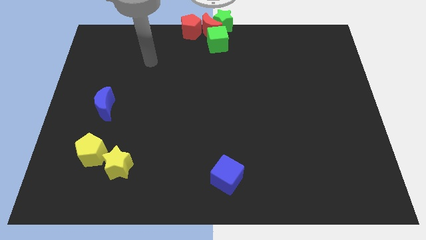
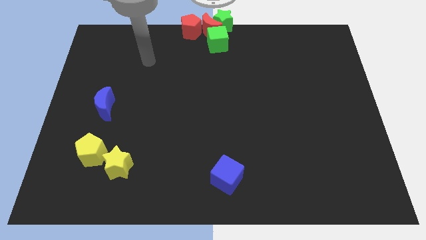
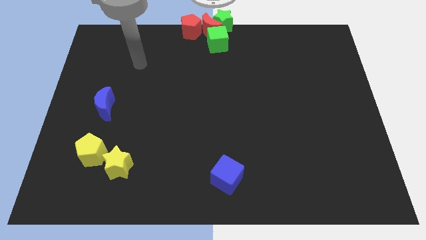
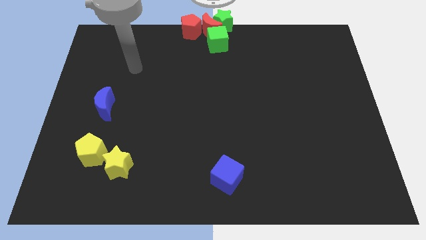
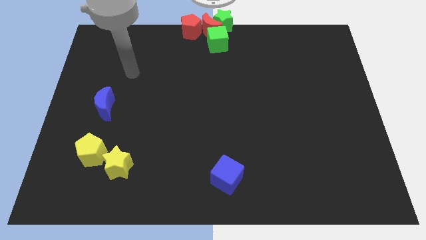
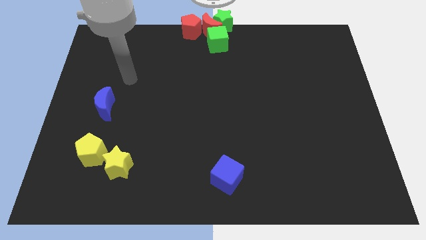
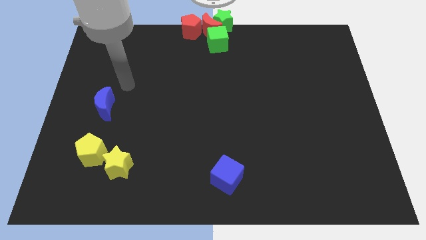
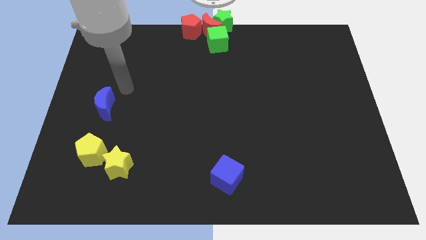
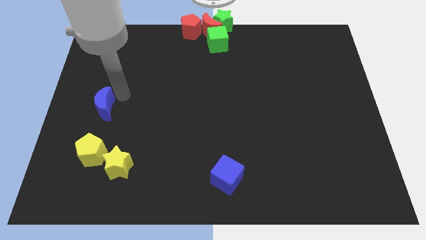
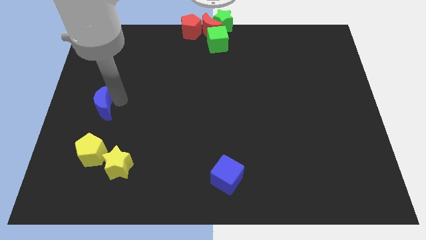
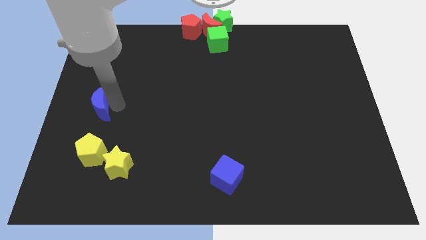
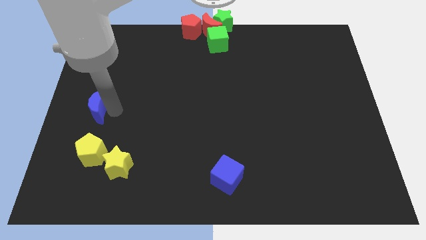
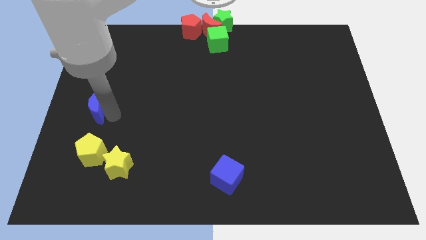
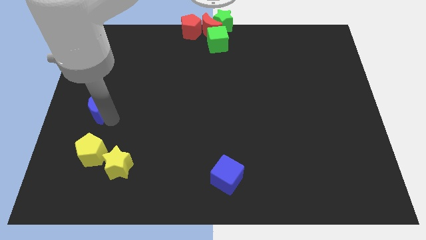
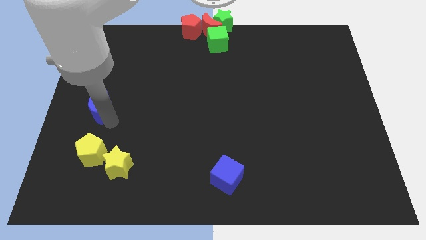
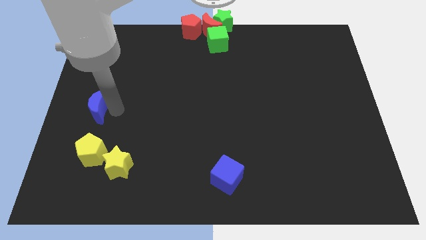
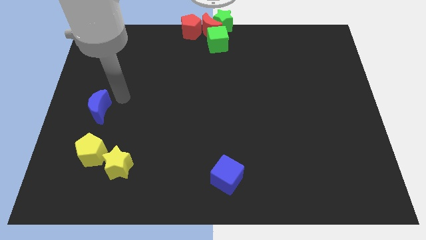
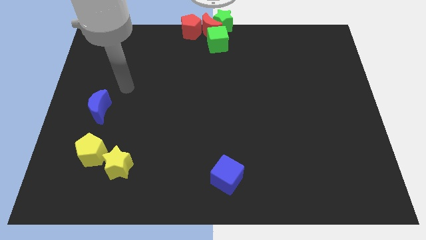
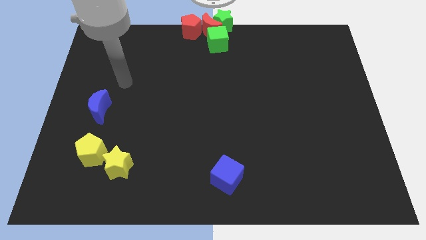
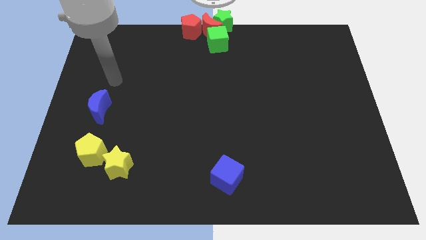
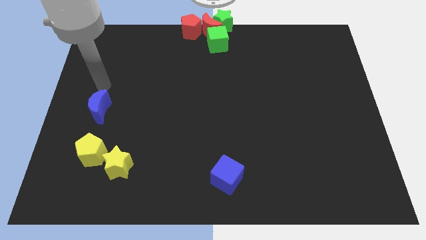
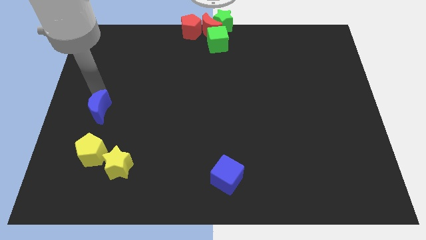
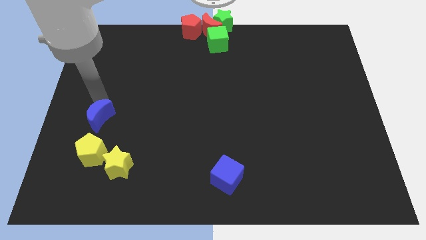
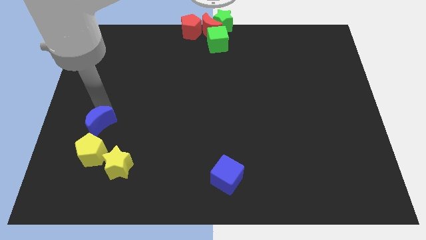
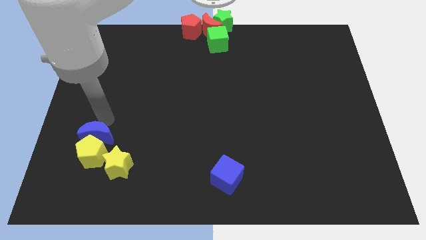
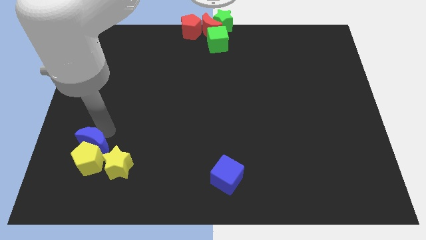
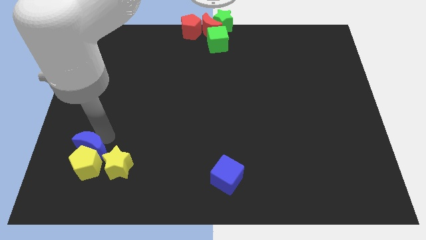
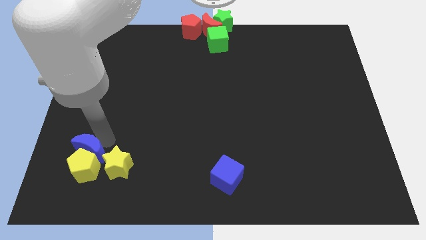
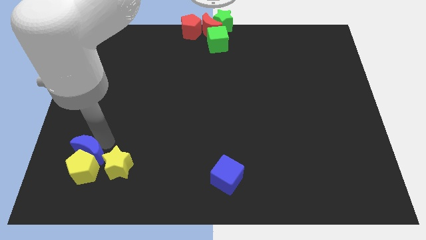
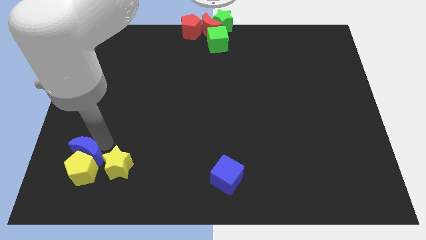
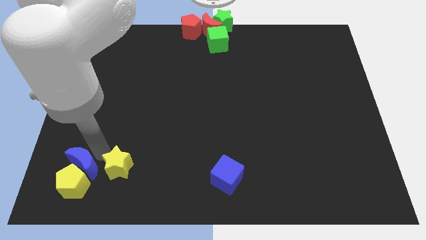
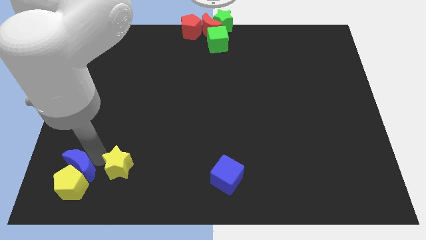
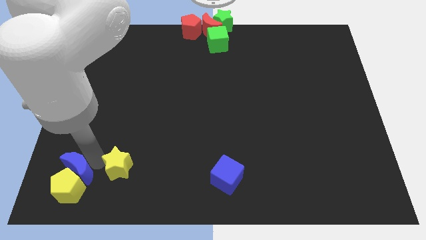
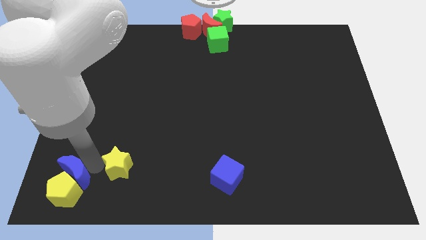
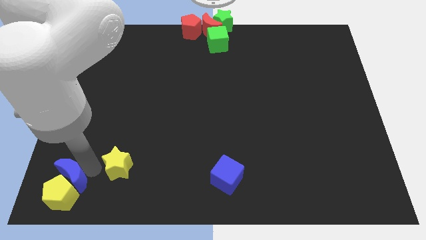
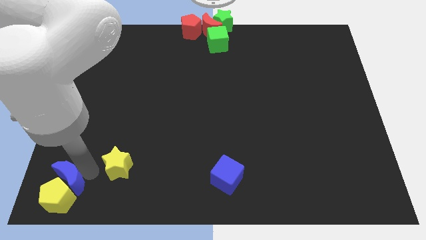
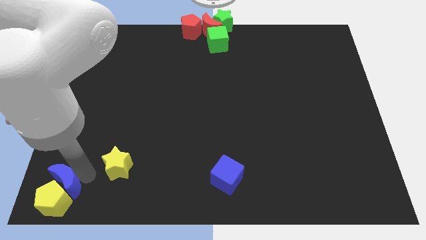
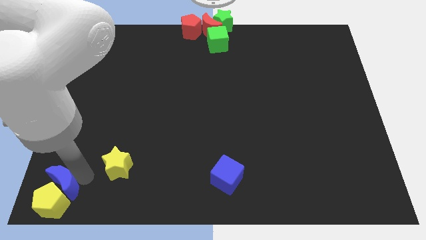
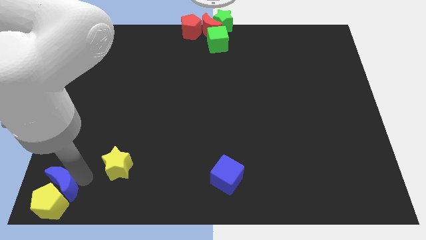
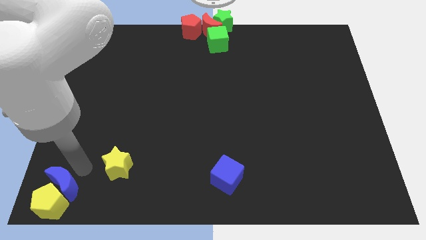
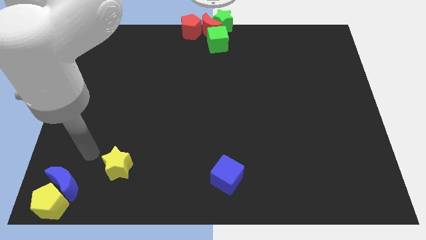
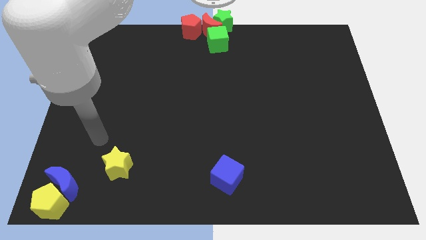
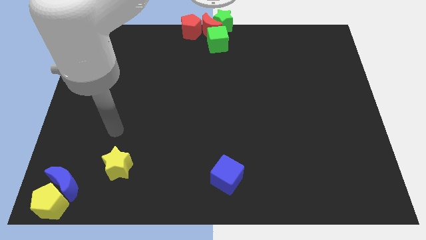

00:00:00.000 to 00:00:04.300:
drag the blue moon with yellow pentagon to bottom left of the board

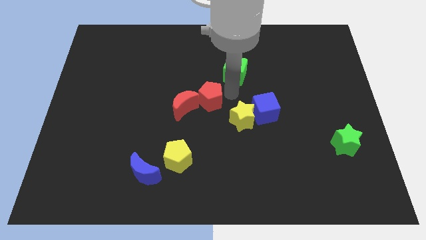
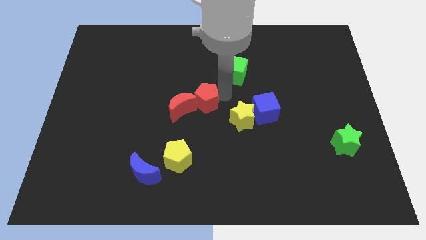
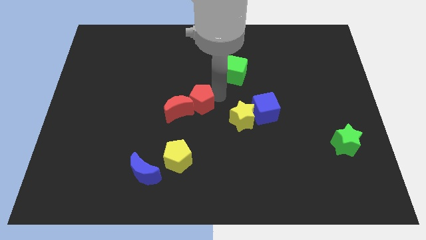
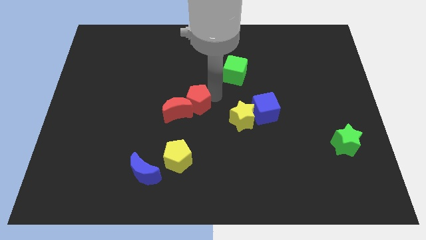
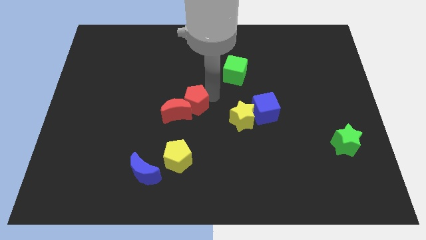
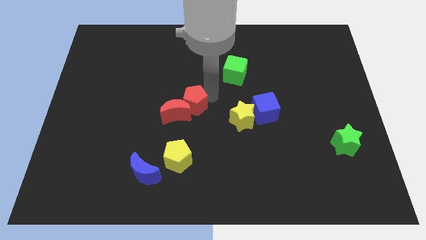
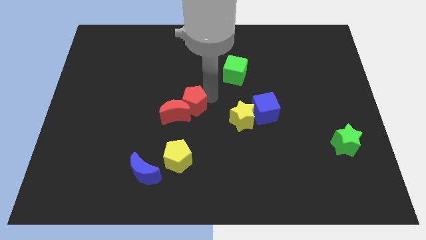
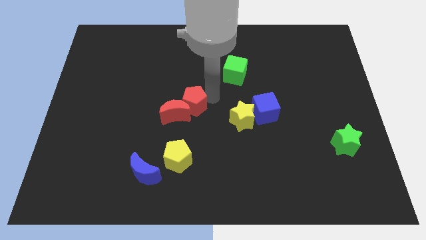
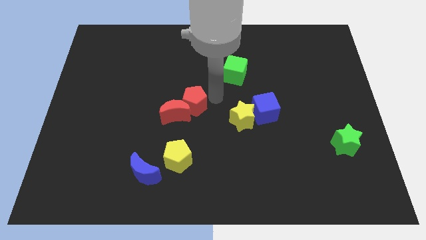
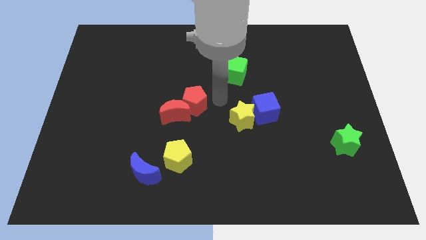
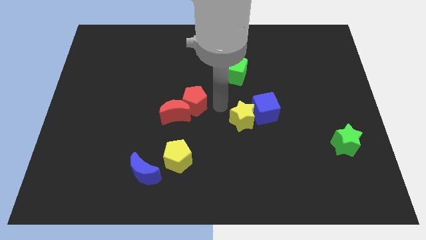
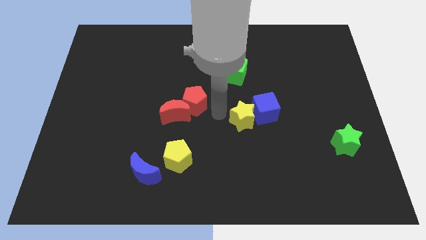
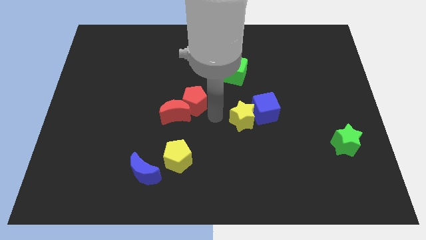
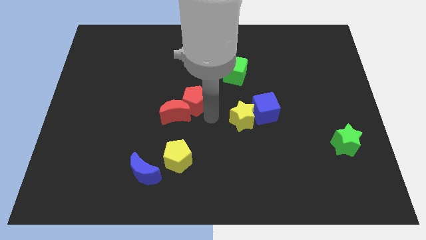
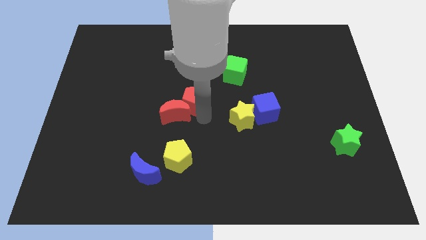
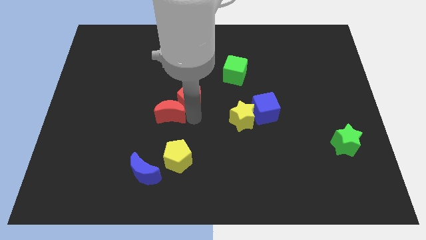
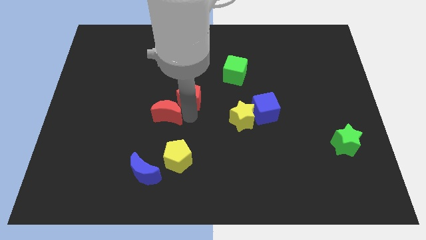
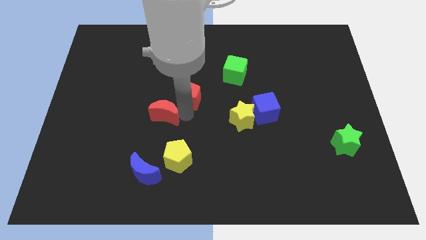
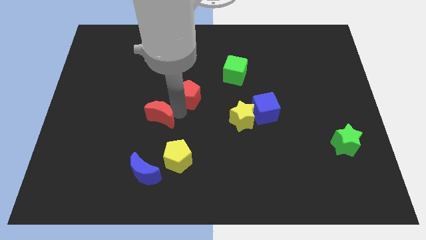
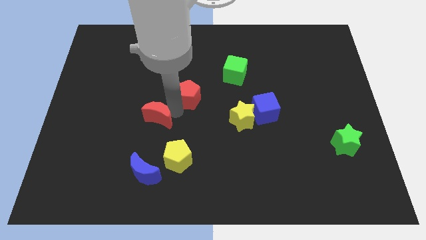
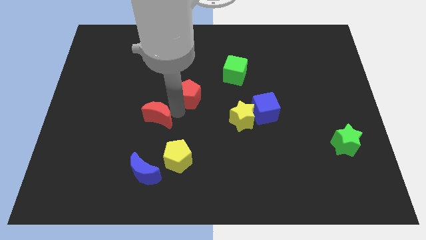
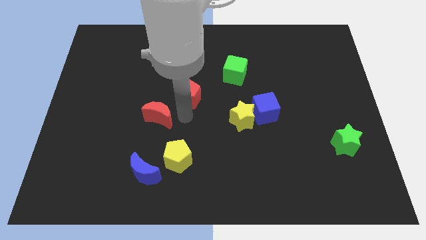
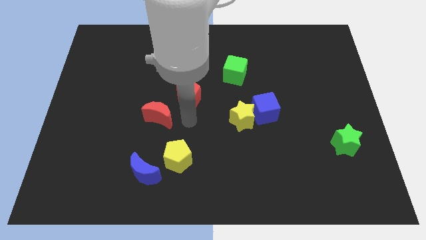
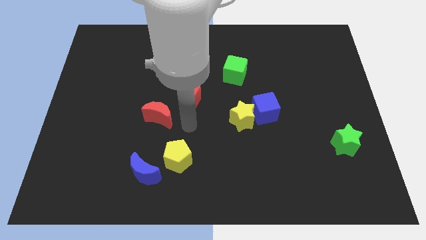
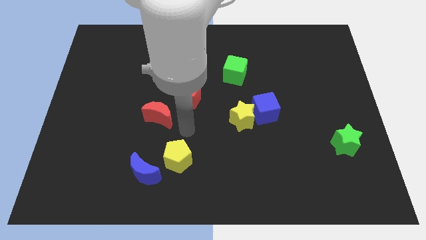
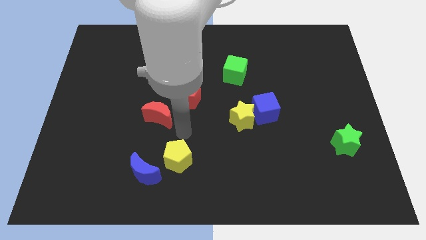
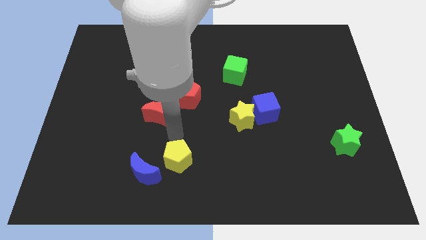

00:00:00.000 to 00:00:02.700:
separate the red moon and red pentagon

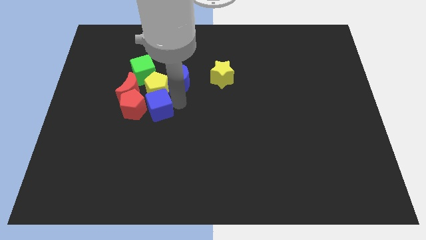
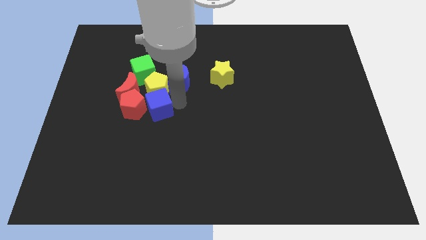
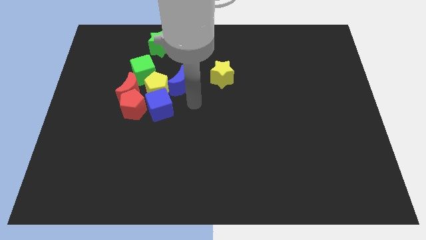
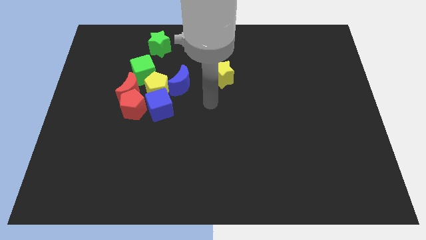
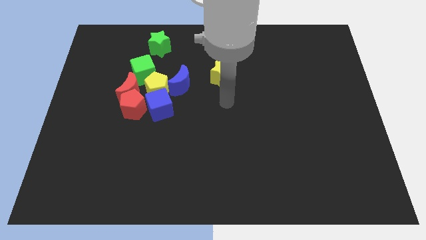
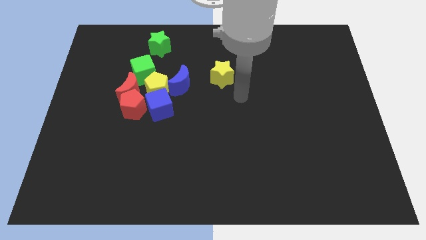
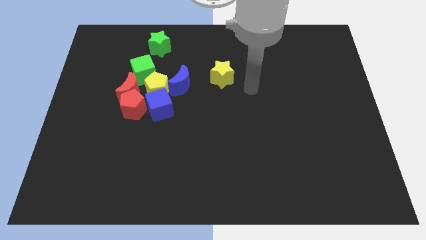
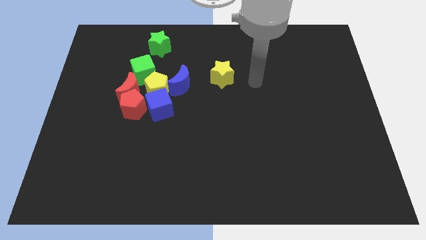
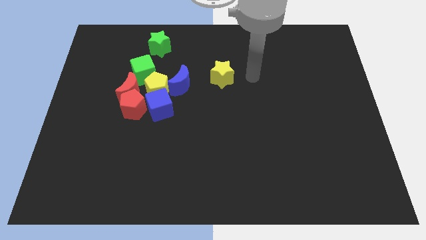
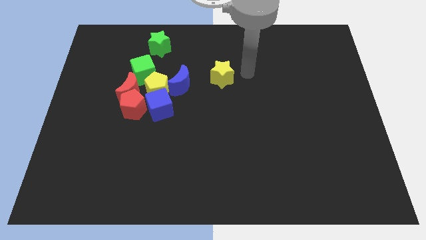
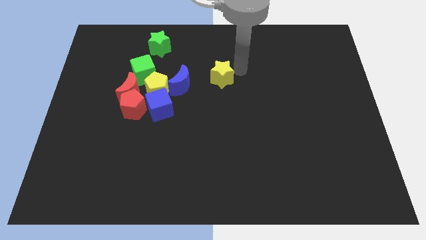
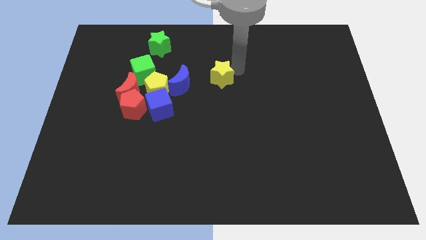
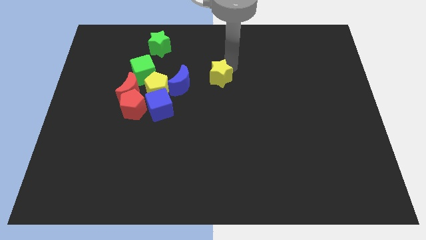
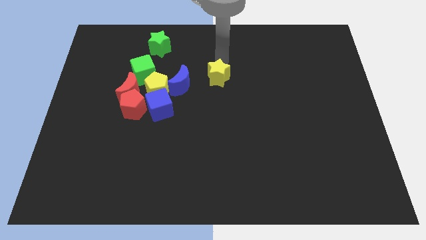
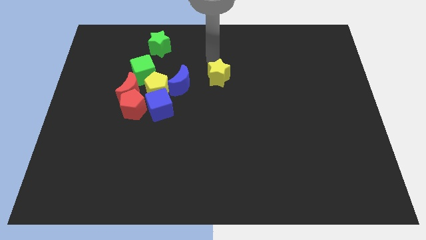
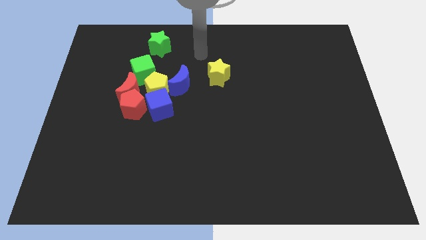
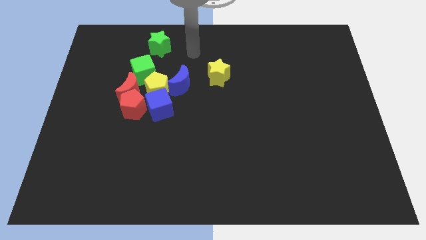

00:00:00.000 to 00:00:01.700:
move your arm away from the blue cube

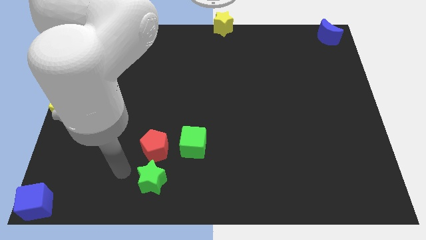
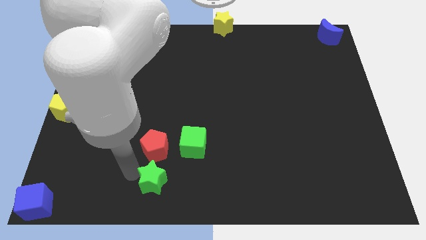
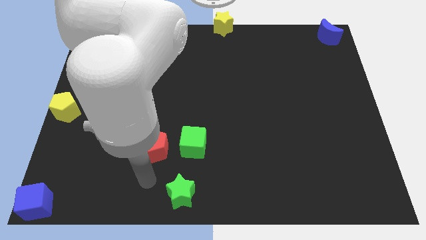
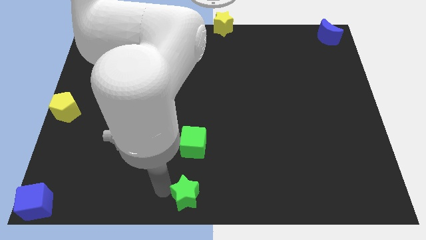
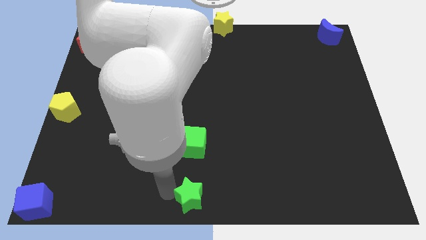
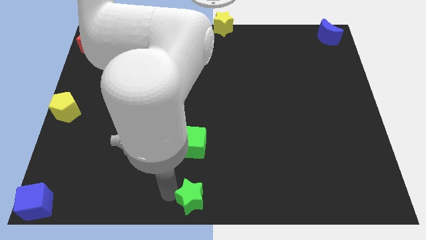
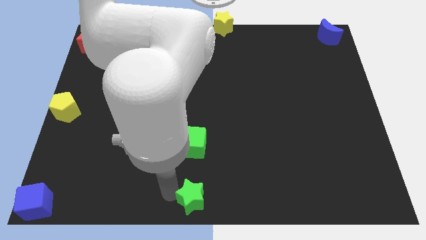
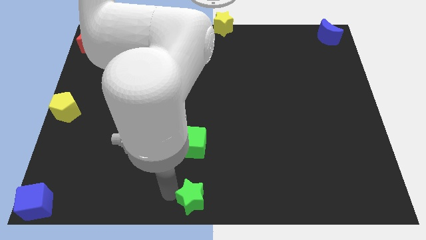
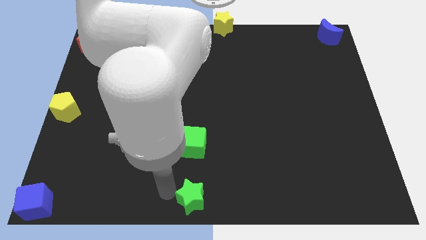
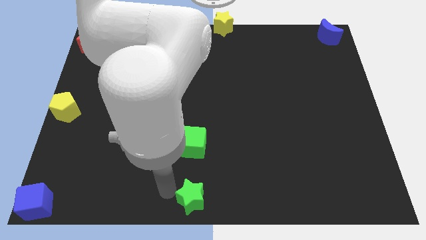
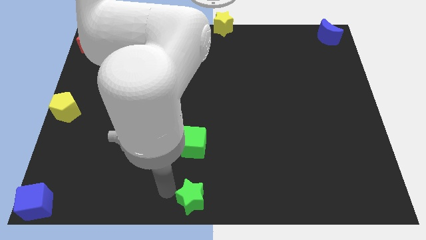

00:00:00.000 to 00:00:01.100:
place green star on the bottom center of the board
